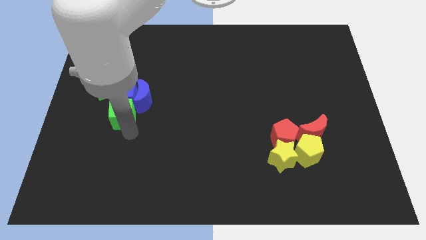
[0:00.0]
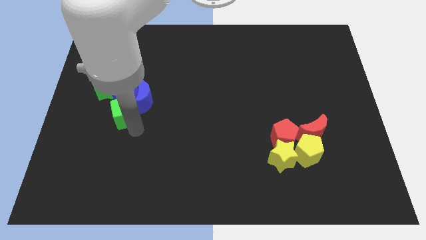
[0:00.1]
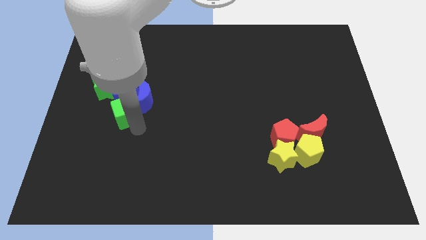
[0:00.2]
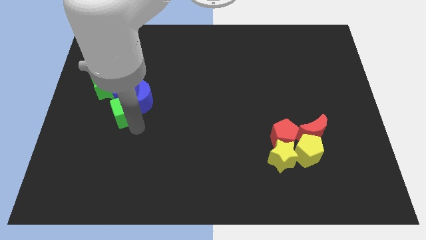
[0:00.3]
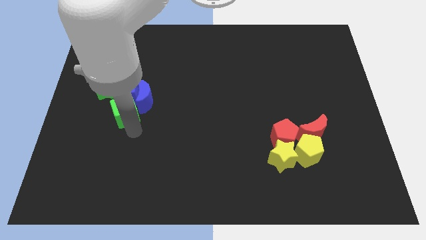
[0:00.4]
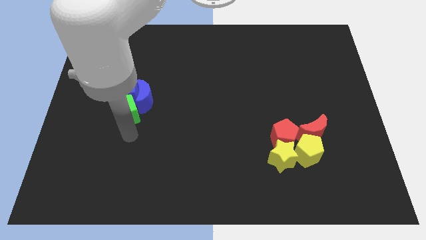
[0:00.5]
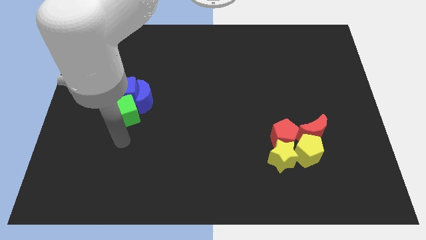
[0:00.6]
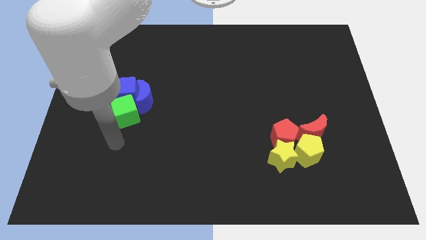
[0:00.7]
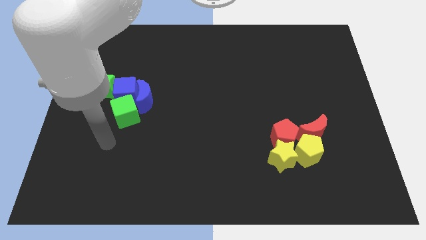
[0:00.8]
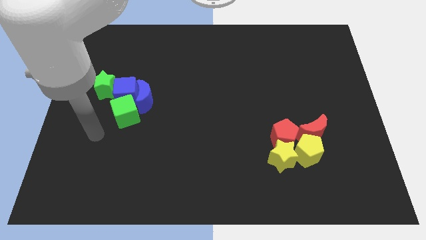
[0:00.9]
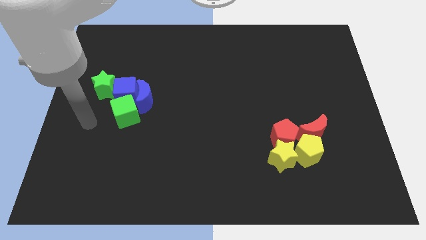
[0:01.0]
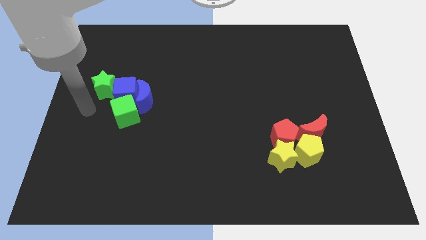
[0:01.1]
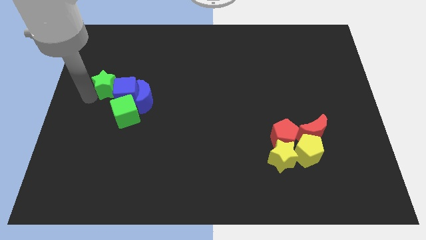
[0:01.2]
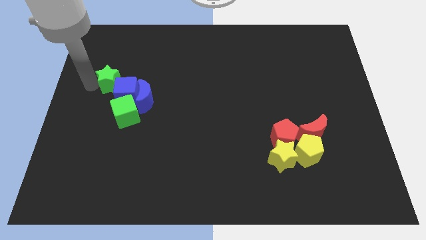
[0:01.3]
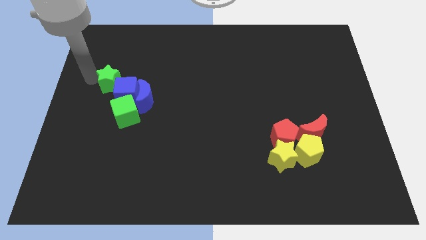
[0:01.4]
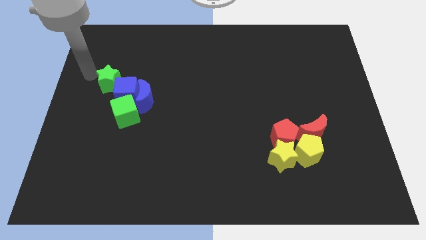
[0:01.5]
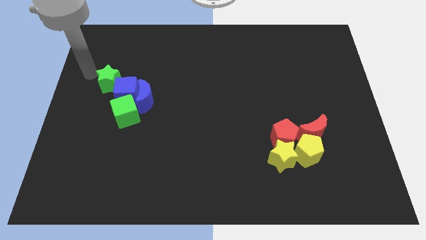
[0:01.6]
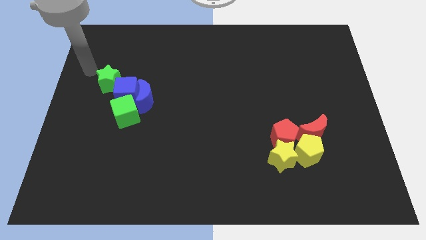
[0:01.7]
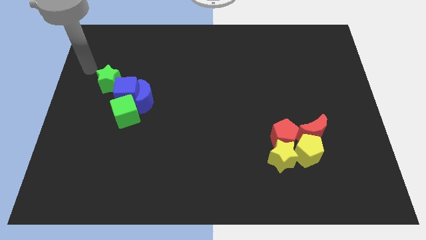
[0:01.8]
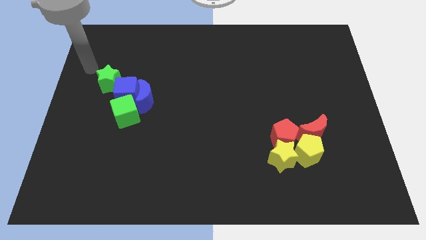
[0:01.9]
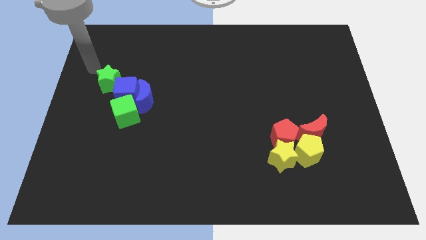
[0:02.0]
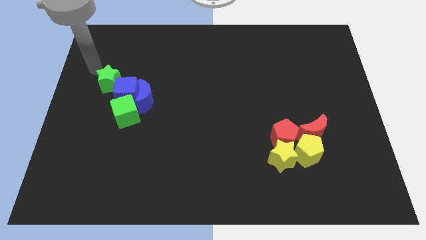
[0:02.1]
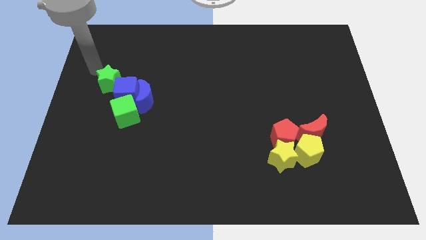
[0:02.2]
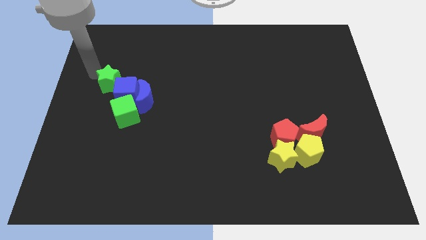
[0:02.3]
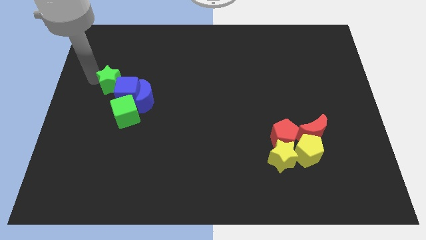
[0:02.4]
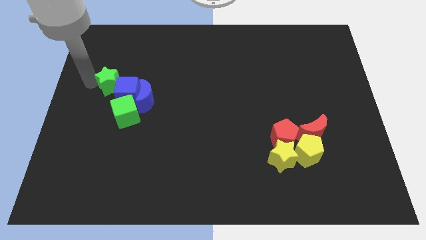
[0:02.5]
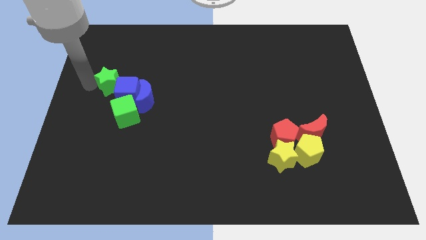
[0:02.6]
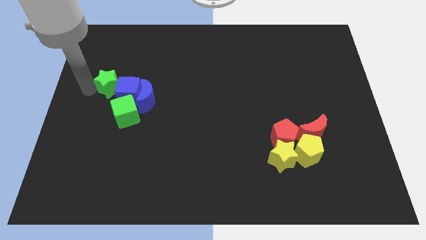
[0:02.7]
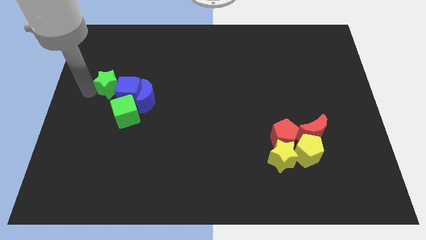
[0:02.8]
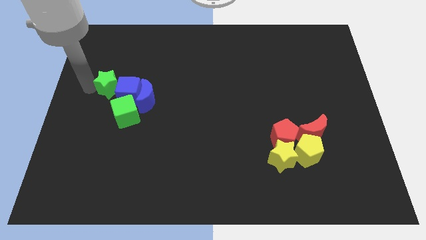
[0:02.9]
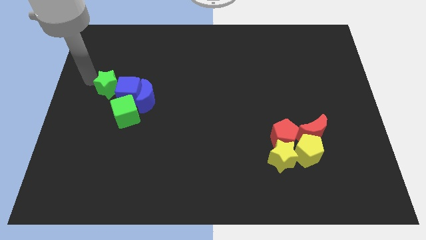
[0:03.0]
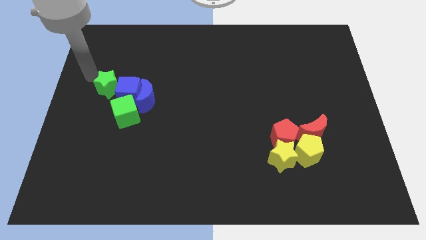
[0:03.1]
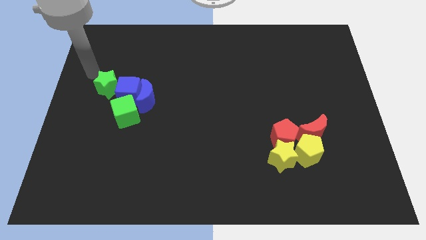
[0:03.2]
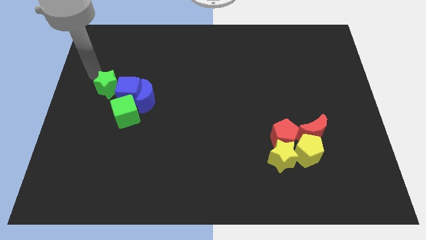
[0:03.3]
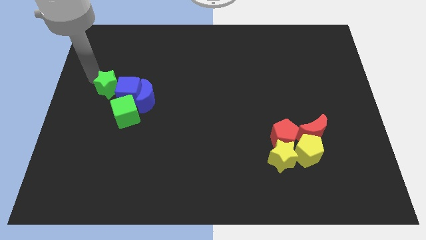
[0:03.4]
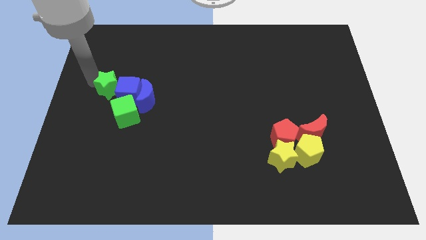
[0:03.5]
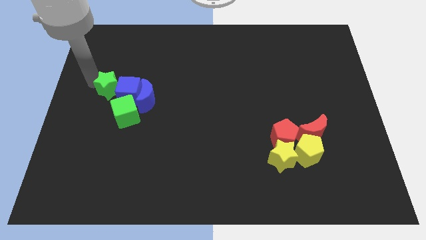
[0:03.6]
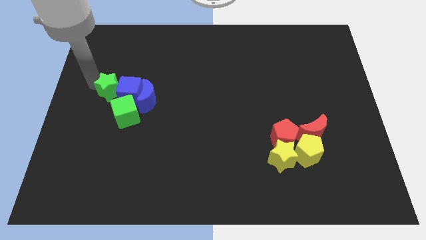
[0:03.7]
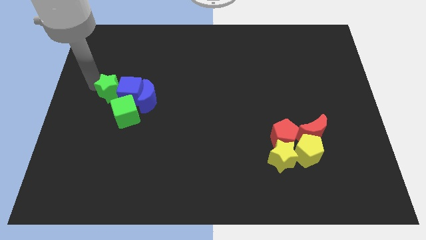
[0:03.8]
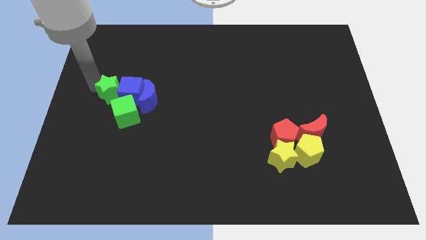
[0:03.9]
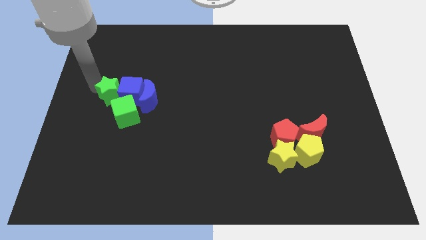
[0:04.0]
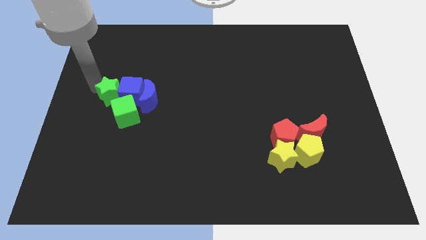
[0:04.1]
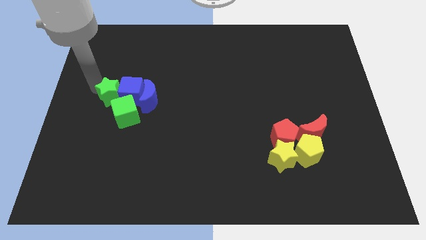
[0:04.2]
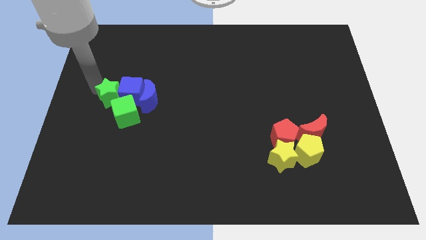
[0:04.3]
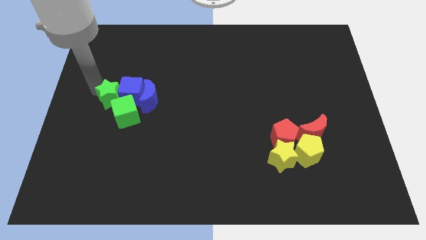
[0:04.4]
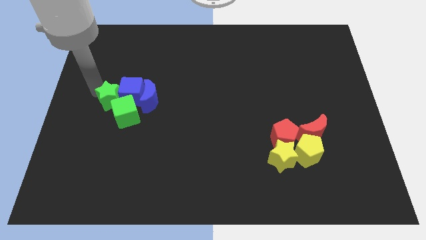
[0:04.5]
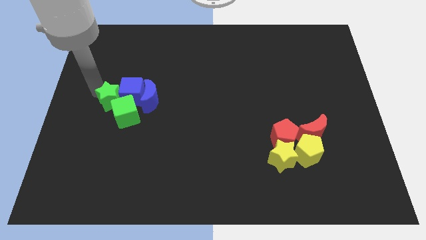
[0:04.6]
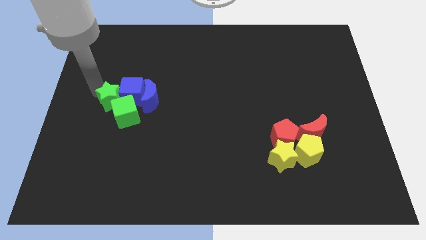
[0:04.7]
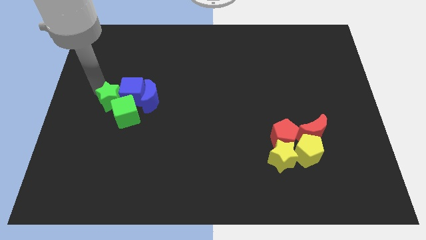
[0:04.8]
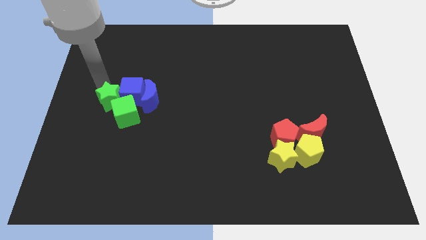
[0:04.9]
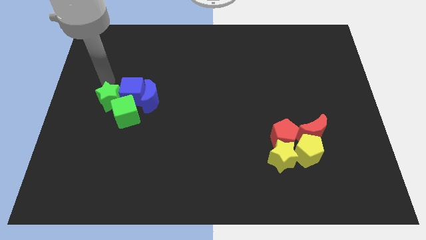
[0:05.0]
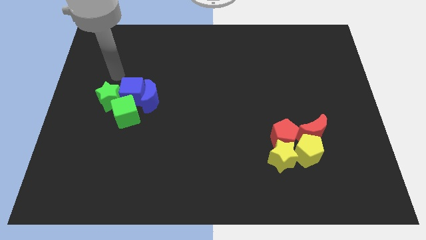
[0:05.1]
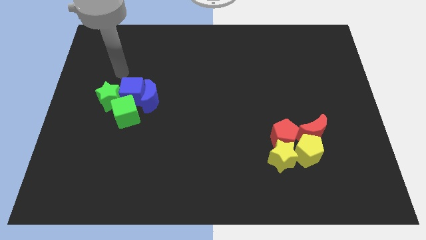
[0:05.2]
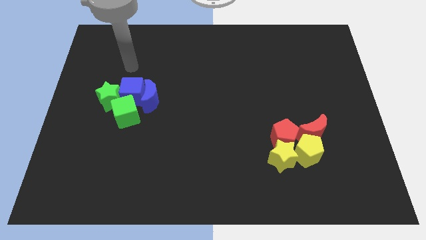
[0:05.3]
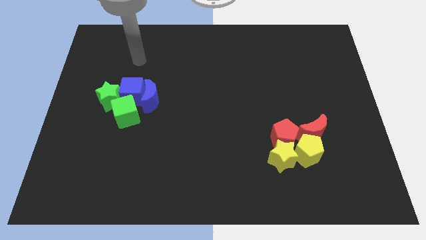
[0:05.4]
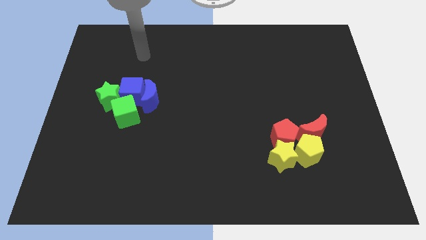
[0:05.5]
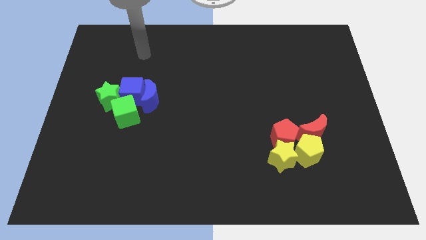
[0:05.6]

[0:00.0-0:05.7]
push the green star to the left side of the blue cube

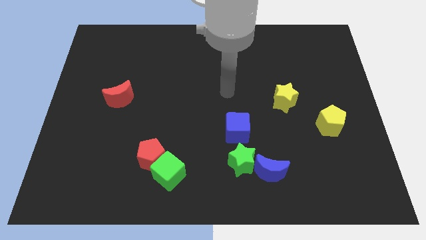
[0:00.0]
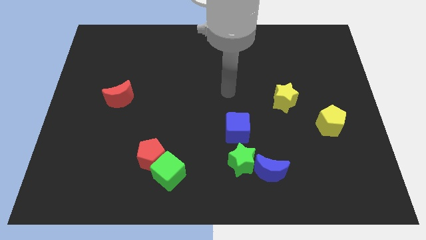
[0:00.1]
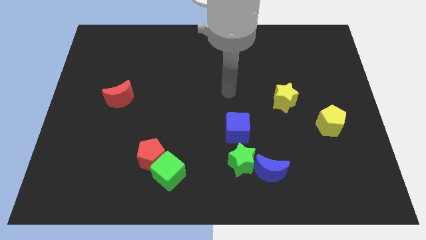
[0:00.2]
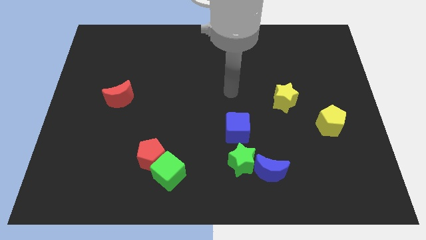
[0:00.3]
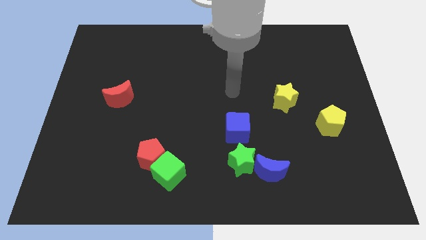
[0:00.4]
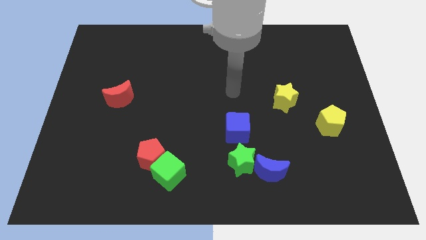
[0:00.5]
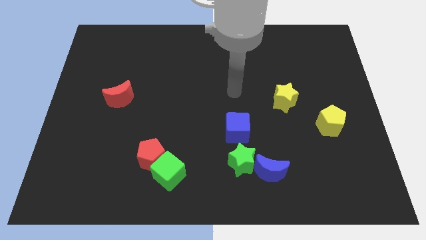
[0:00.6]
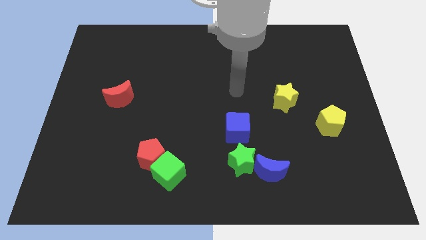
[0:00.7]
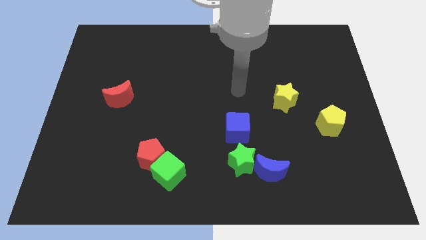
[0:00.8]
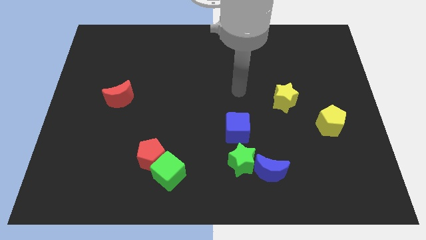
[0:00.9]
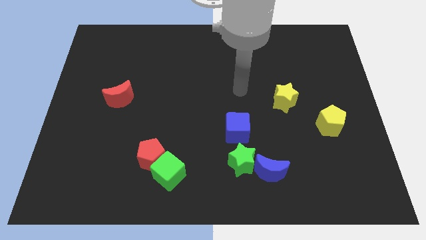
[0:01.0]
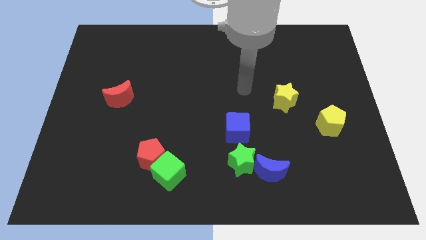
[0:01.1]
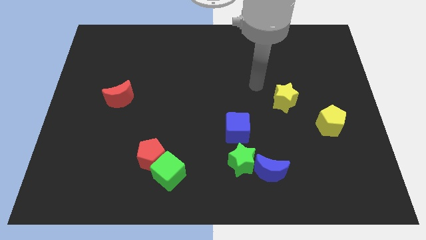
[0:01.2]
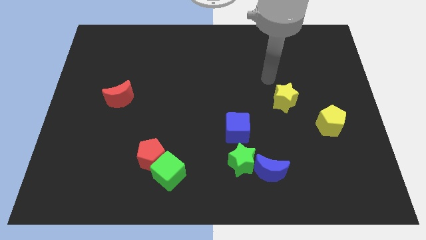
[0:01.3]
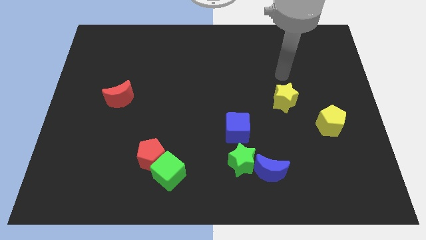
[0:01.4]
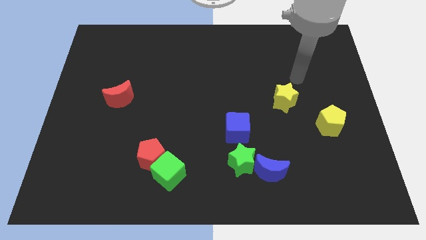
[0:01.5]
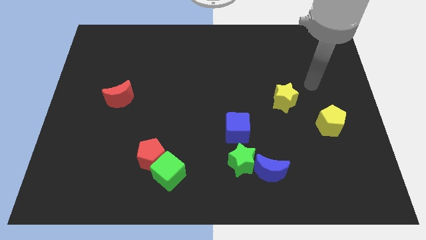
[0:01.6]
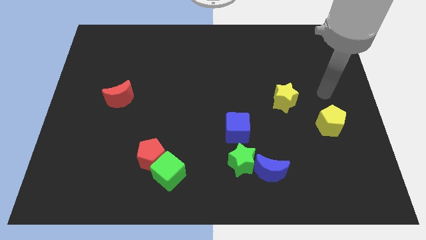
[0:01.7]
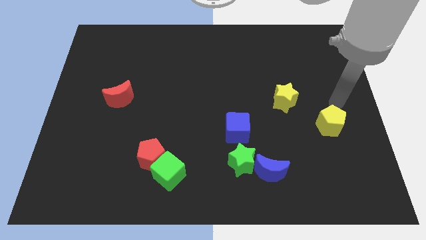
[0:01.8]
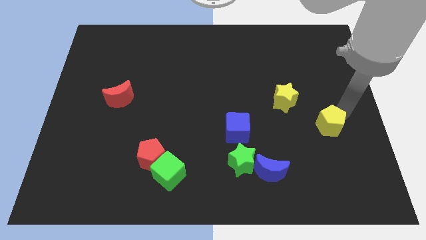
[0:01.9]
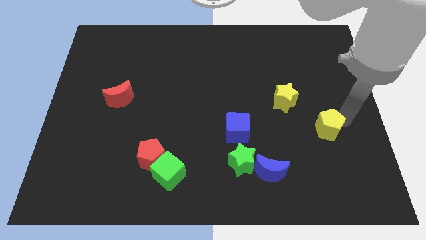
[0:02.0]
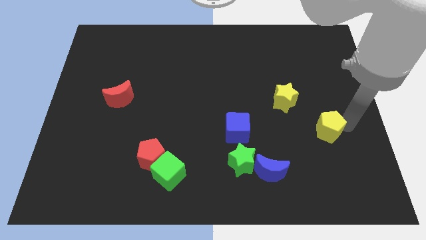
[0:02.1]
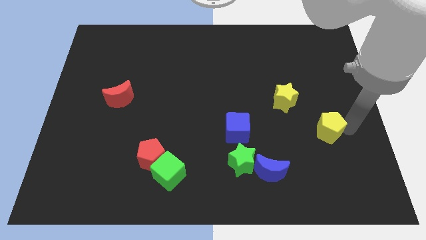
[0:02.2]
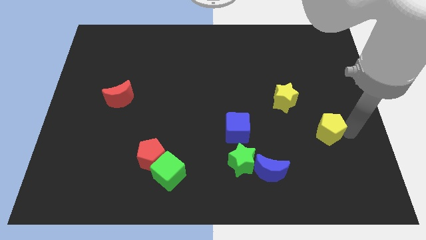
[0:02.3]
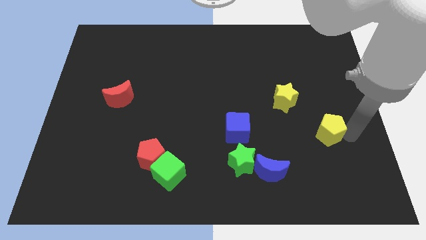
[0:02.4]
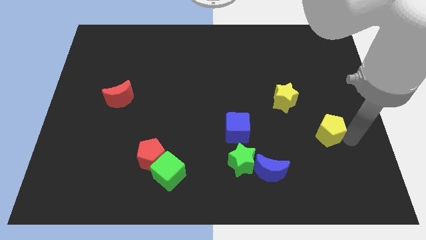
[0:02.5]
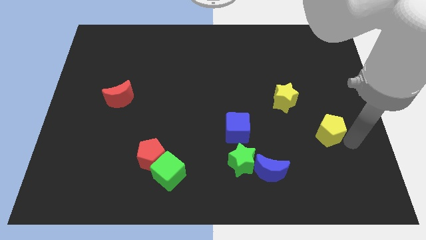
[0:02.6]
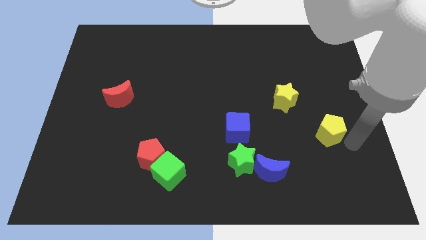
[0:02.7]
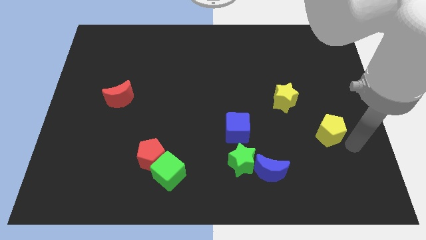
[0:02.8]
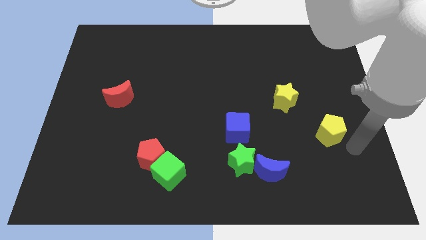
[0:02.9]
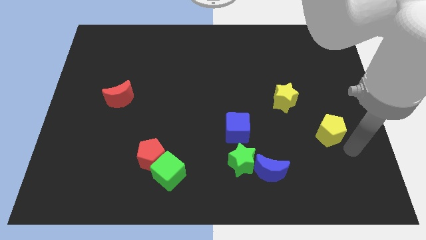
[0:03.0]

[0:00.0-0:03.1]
slide yellow pentagon slightly to the left

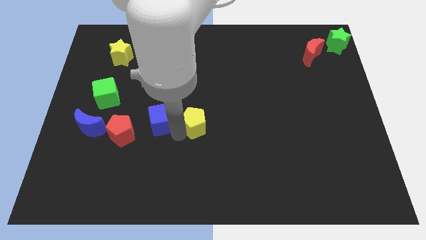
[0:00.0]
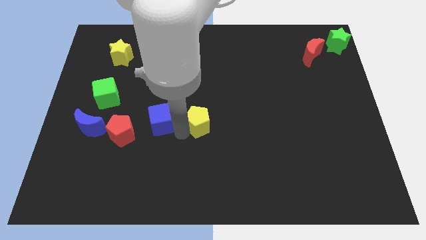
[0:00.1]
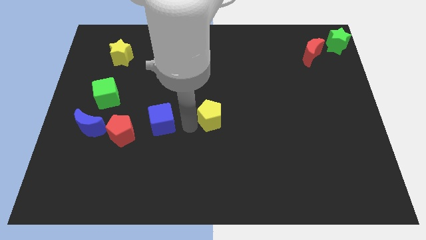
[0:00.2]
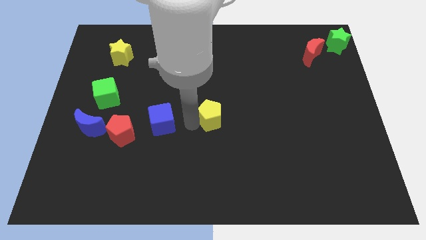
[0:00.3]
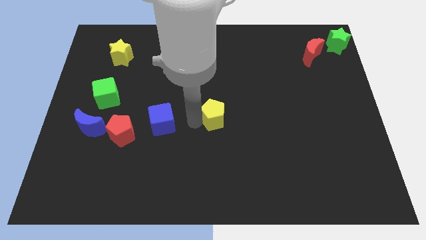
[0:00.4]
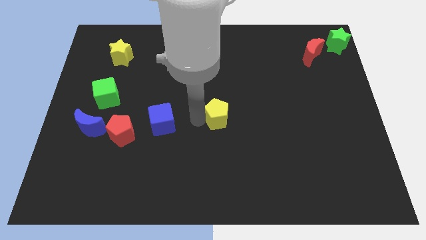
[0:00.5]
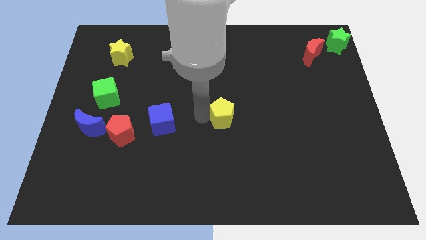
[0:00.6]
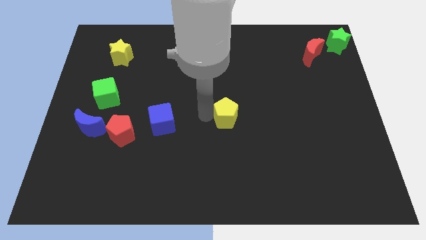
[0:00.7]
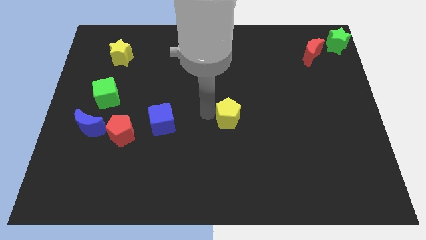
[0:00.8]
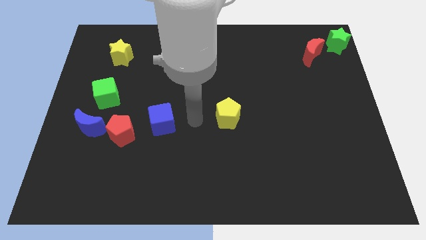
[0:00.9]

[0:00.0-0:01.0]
separate yellow pentagon from blue cube
